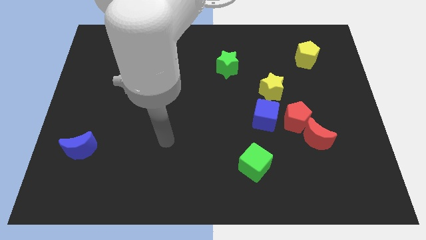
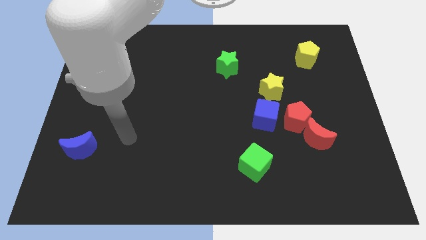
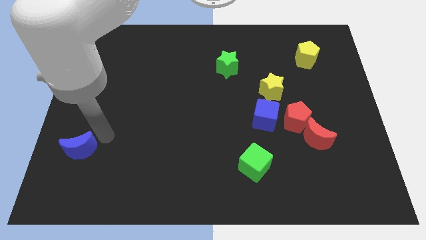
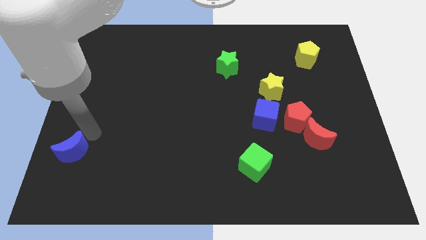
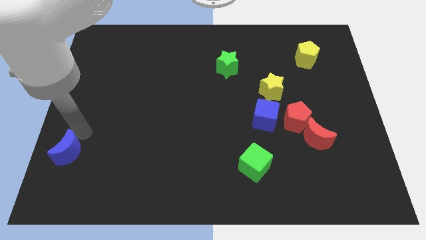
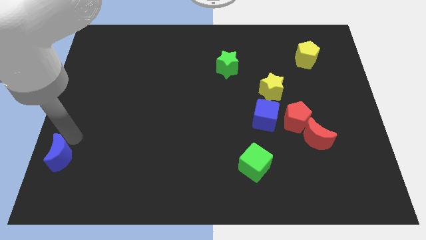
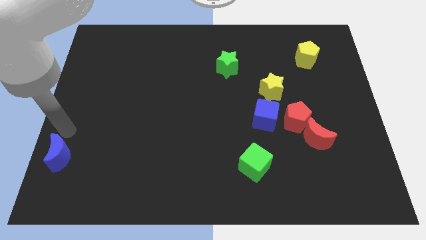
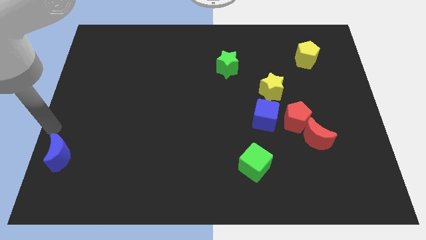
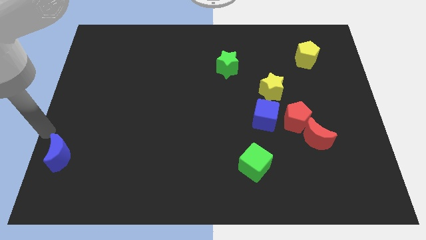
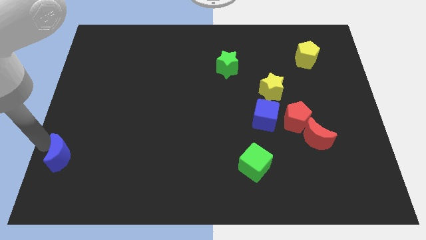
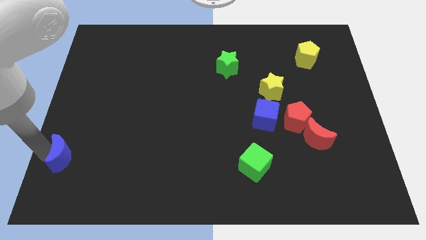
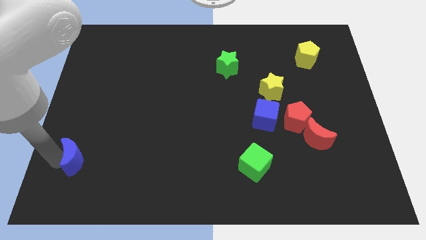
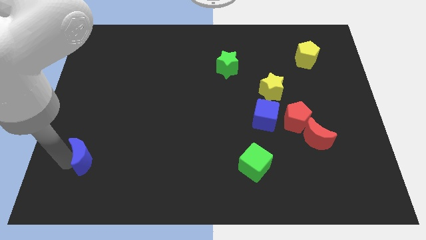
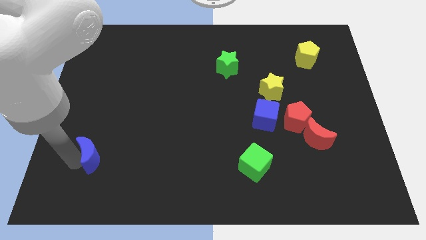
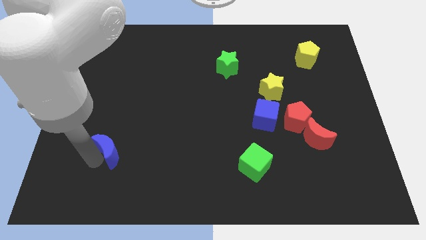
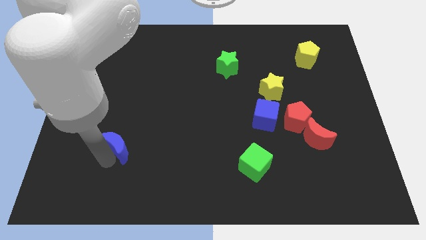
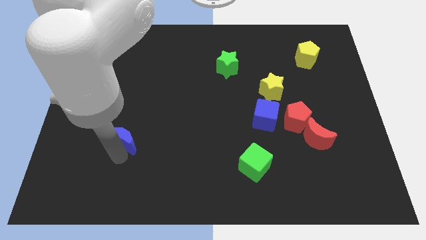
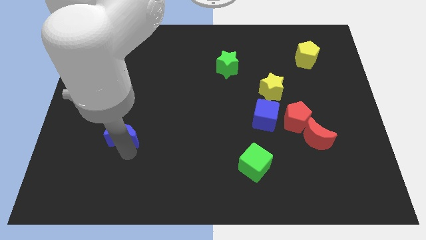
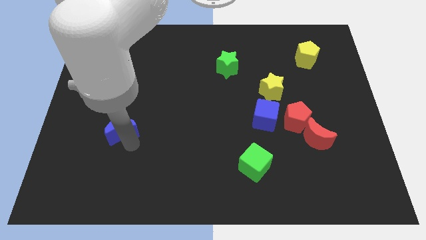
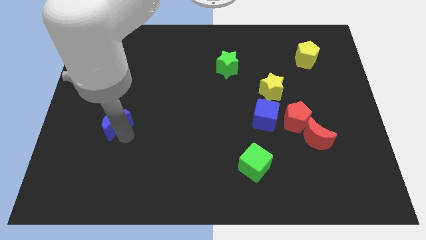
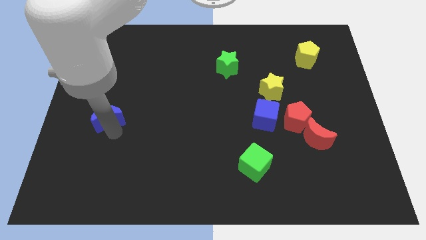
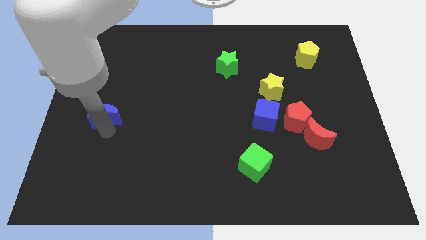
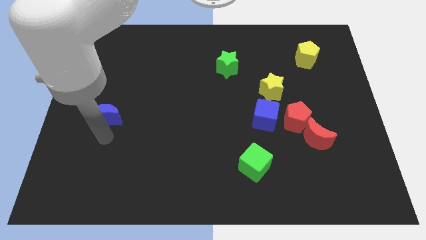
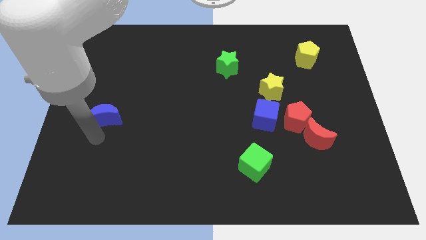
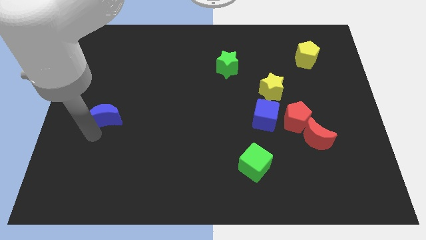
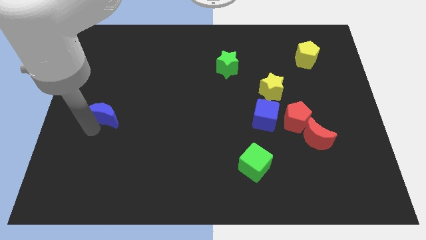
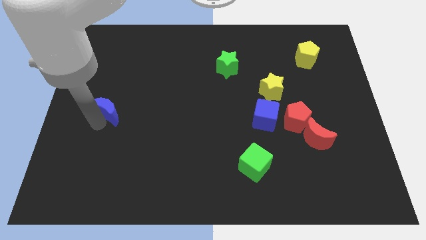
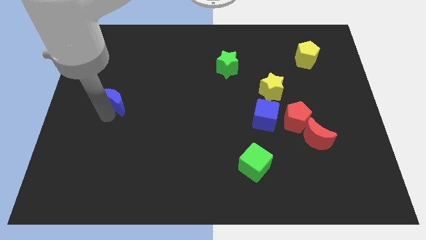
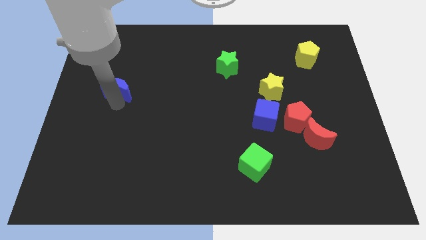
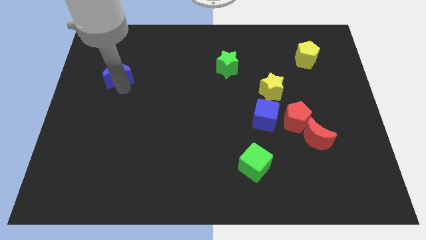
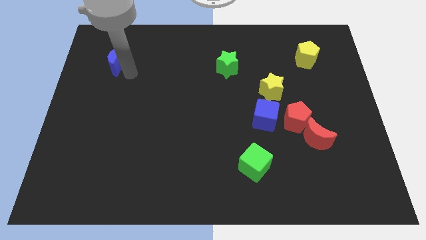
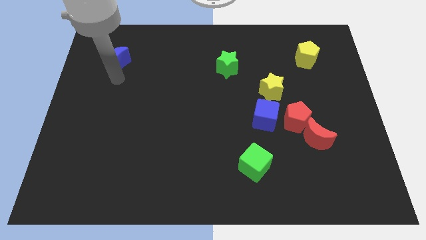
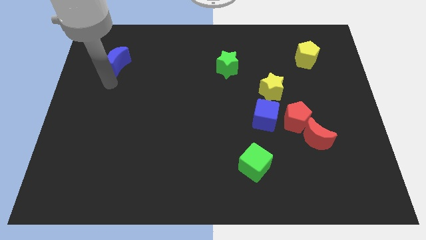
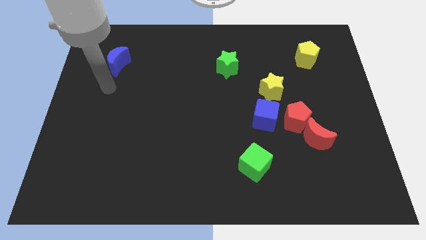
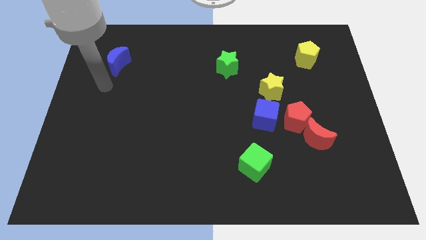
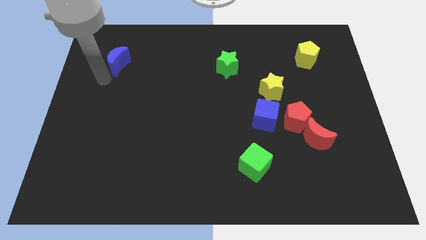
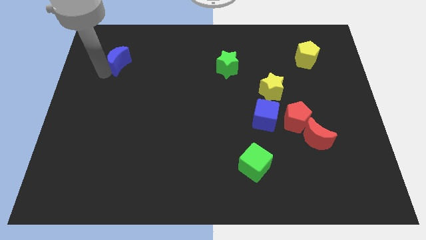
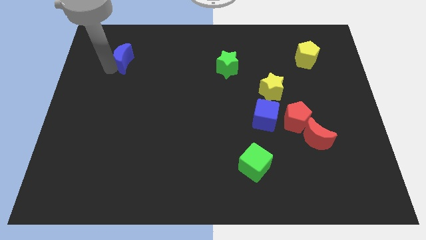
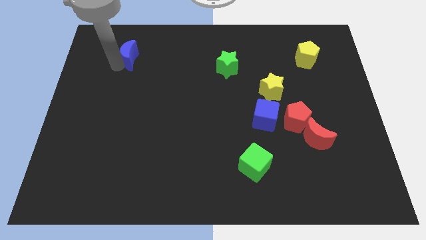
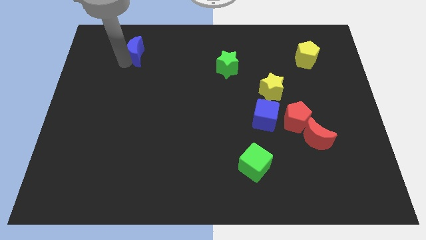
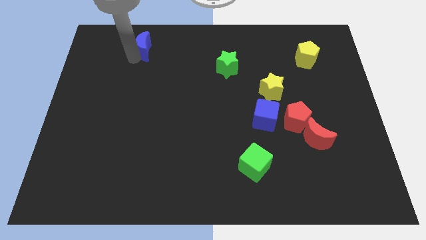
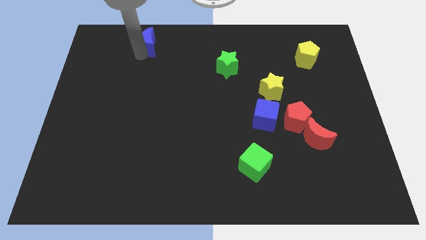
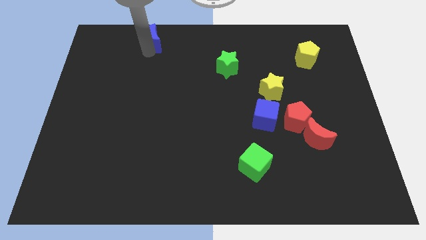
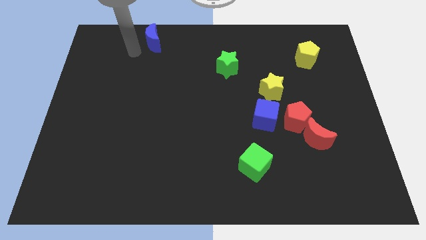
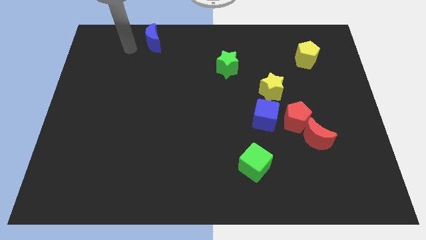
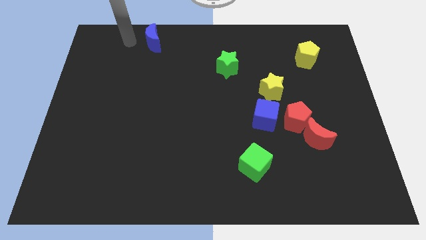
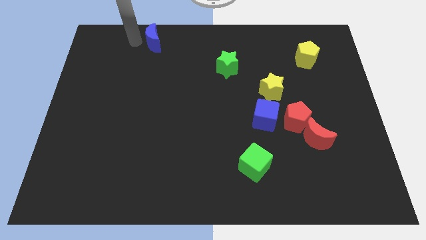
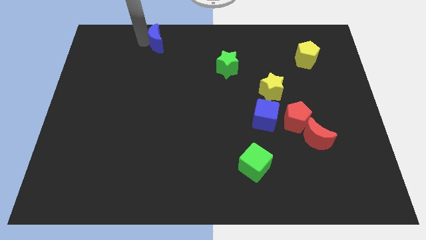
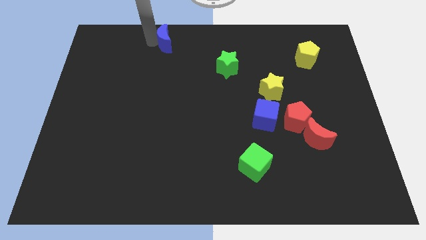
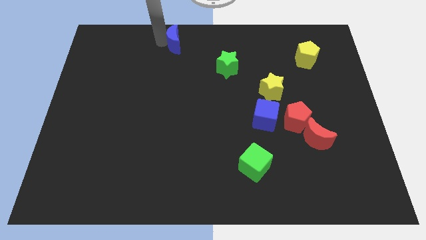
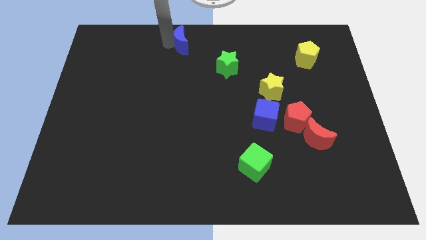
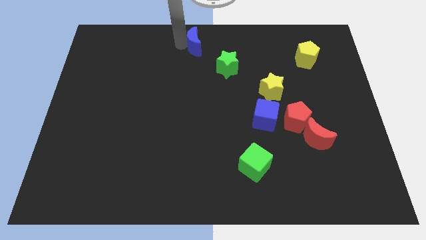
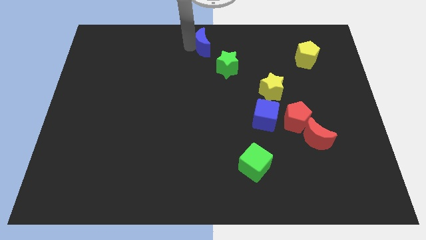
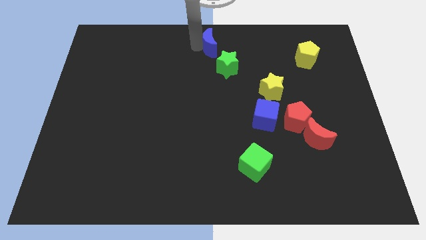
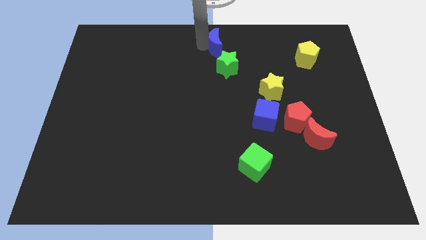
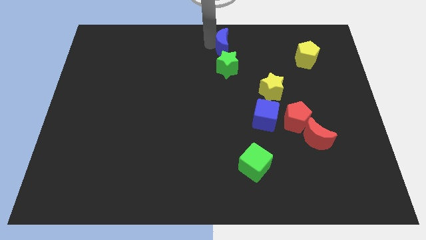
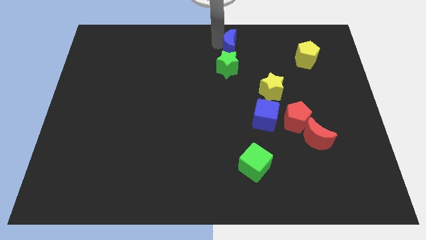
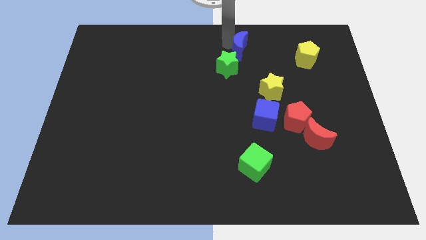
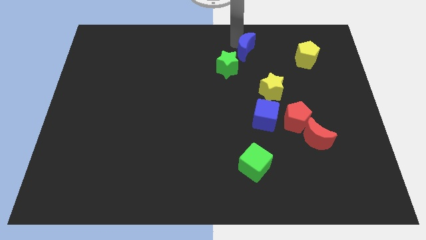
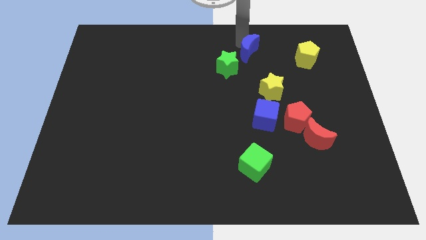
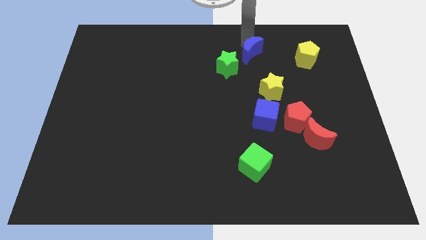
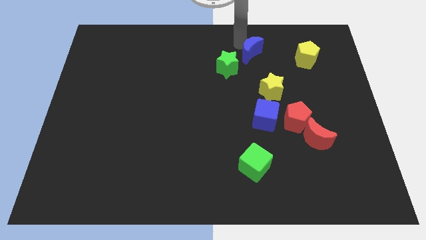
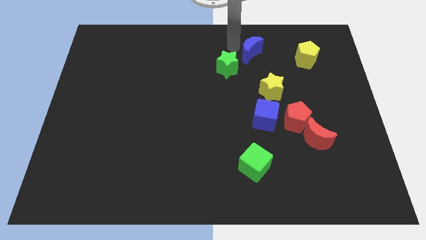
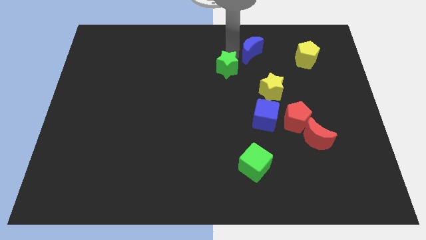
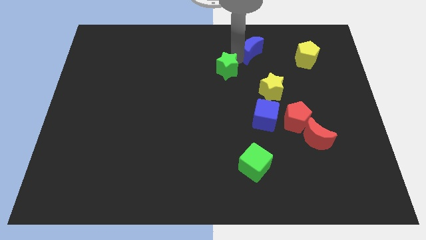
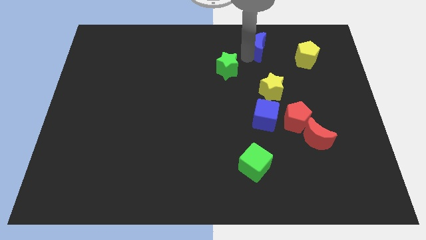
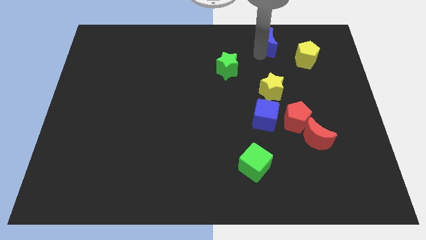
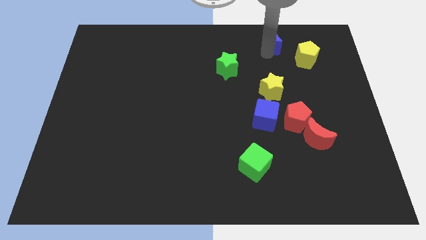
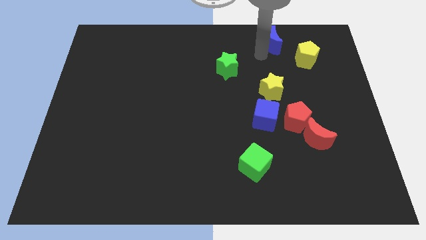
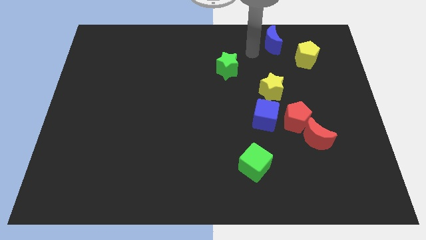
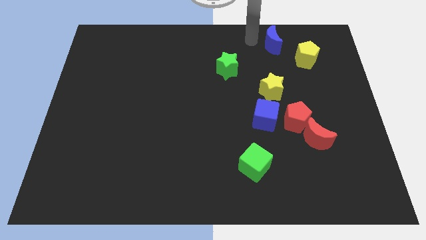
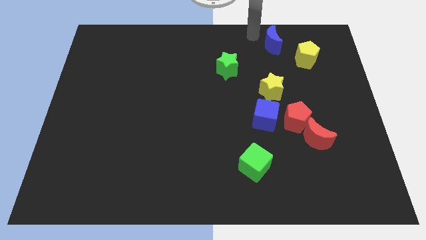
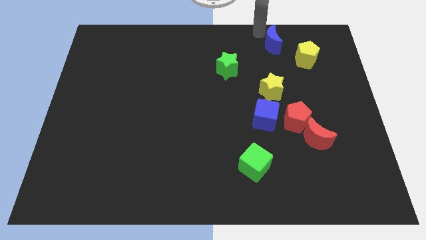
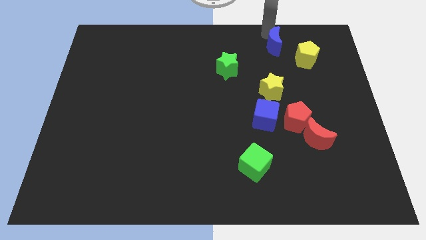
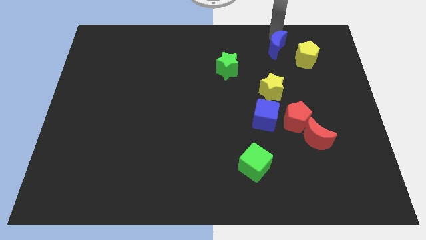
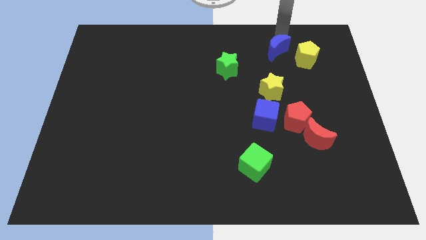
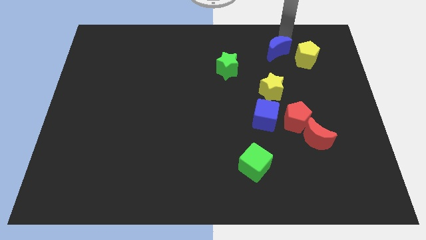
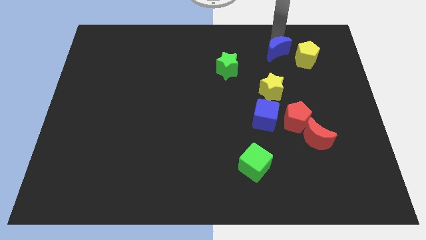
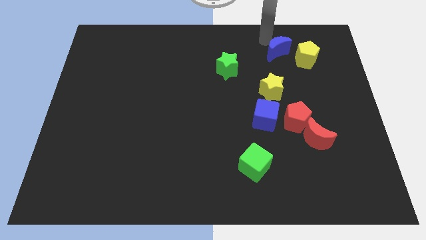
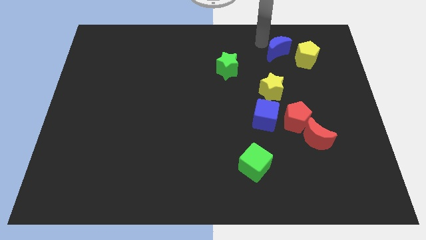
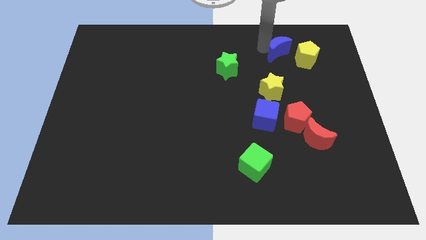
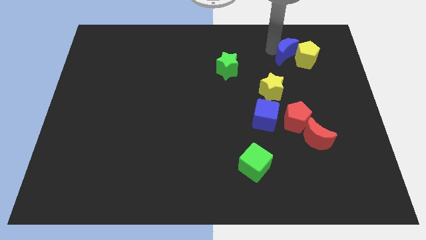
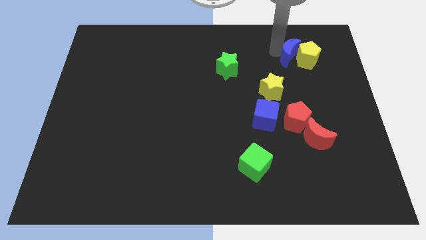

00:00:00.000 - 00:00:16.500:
put the blue moon next to the yellow pentagon

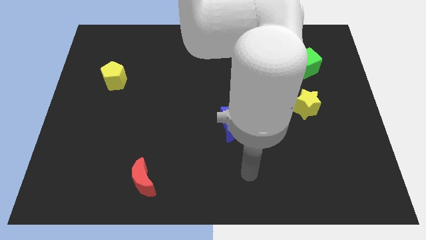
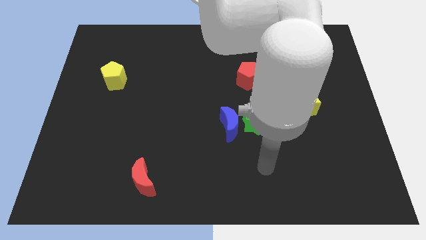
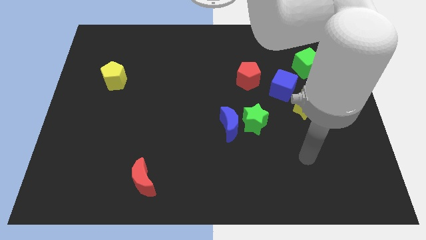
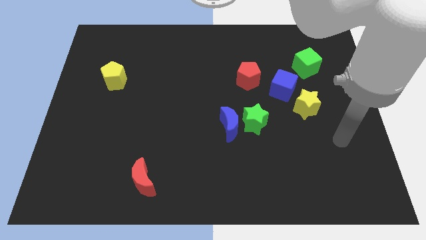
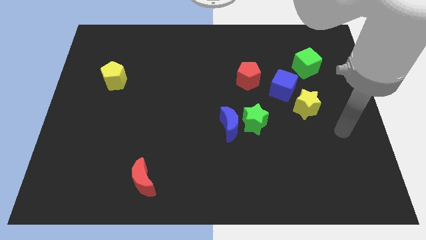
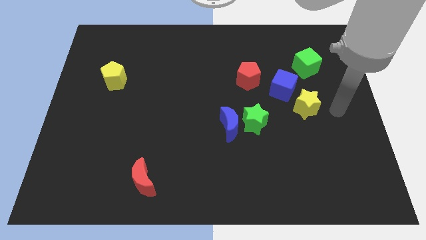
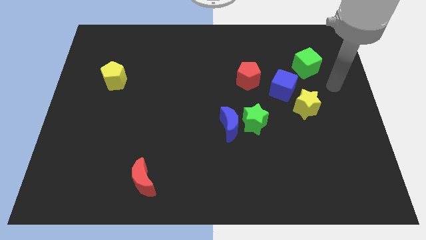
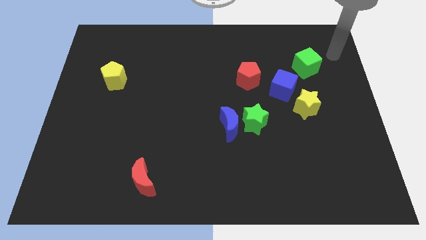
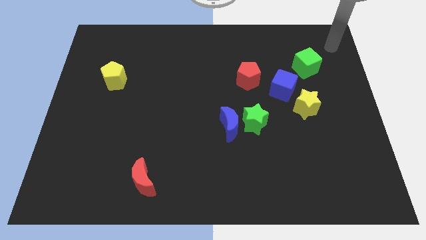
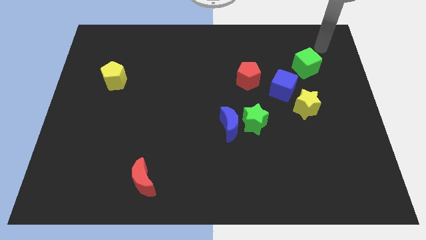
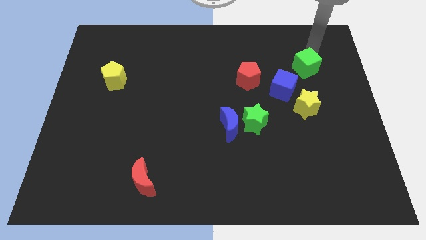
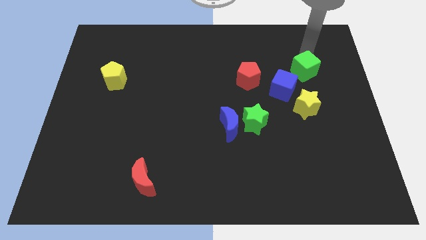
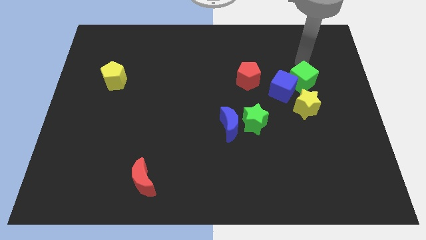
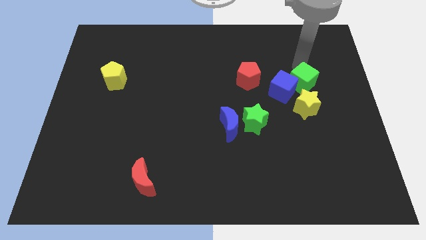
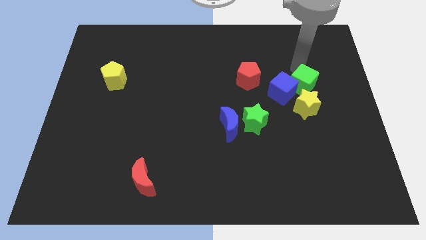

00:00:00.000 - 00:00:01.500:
push the green cube to the blue cube
